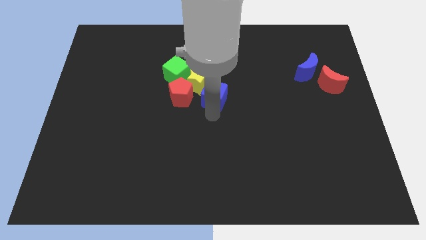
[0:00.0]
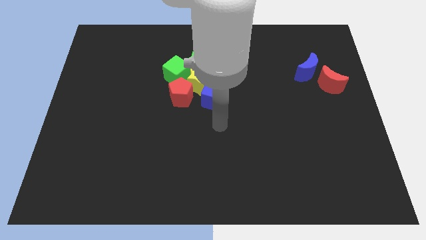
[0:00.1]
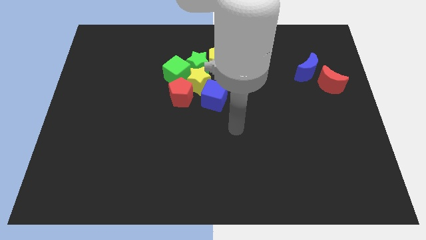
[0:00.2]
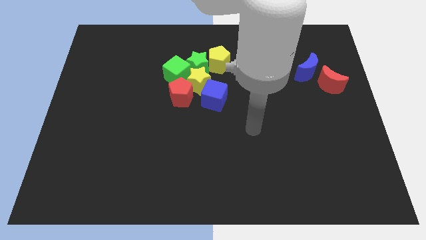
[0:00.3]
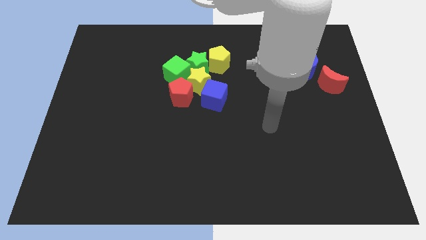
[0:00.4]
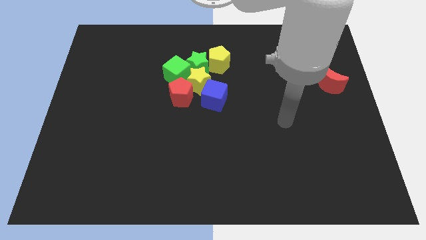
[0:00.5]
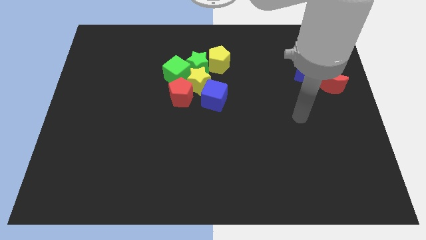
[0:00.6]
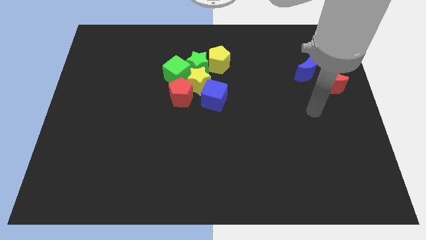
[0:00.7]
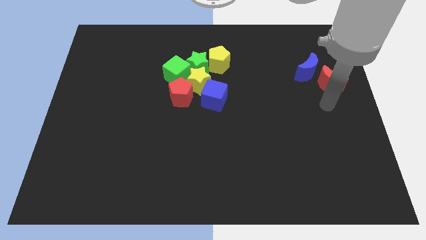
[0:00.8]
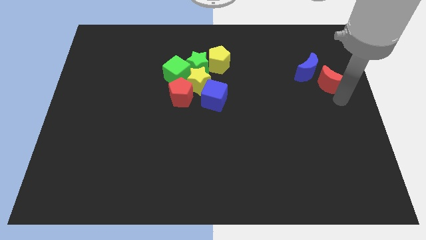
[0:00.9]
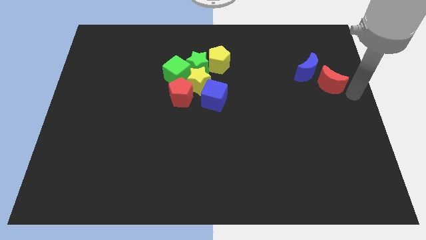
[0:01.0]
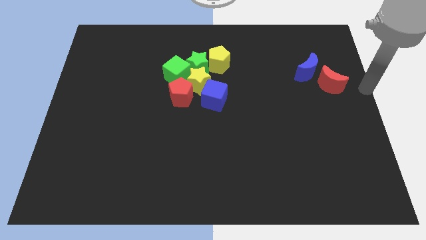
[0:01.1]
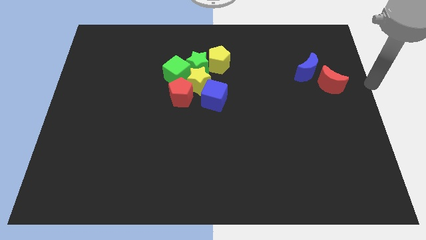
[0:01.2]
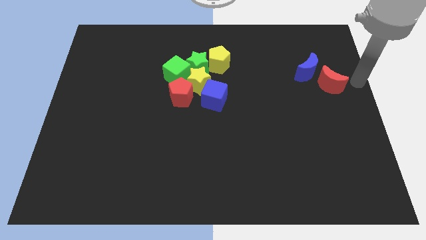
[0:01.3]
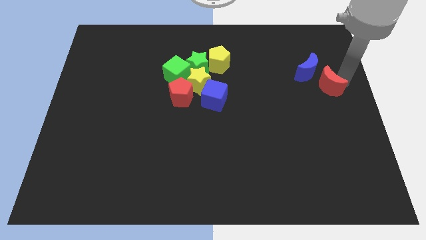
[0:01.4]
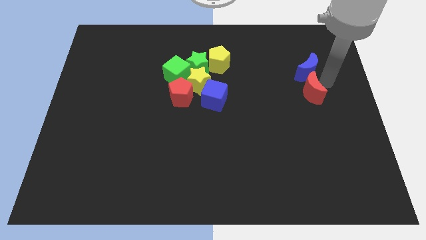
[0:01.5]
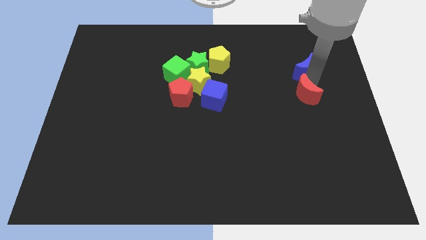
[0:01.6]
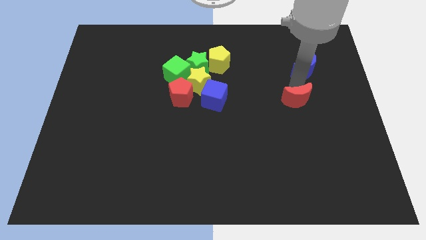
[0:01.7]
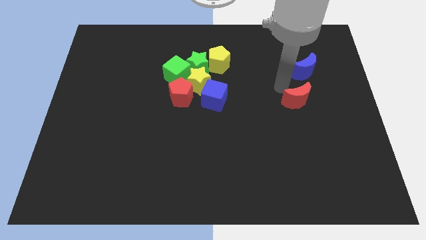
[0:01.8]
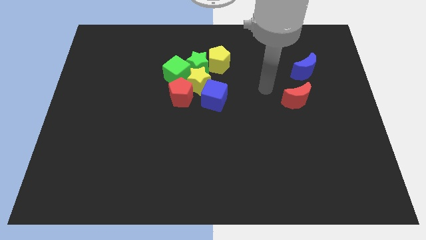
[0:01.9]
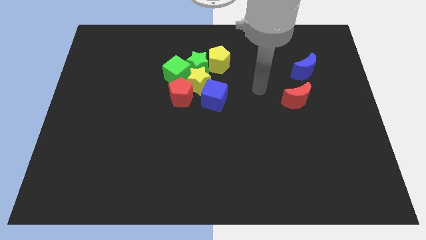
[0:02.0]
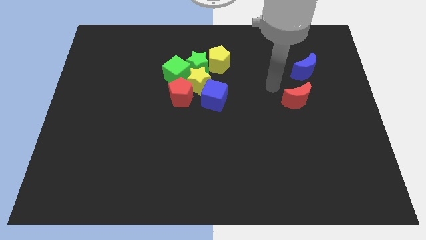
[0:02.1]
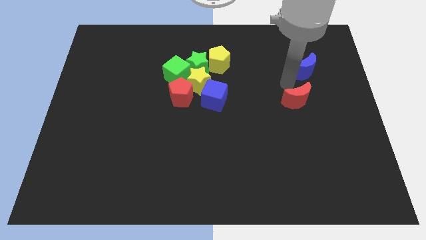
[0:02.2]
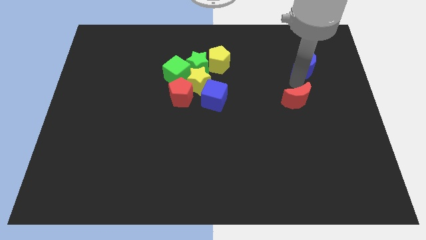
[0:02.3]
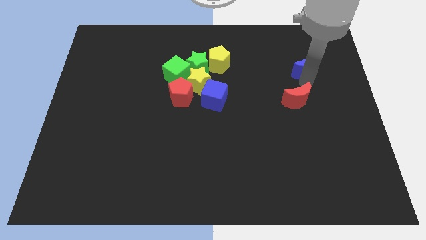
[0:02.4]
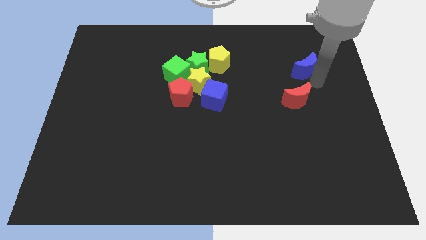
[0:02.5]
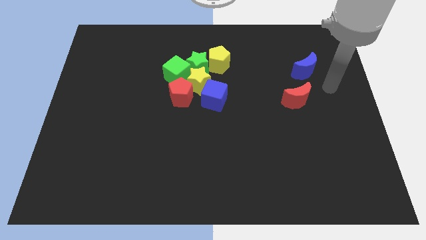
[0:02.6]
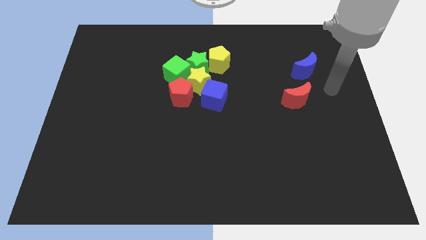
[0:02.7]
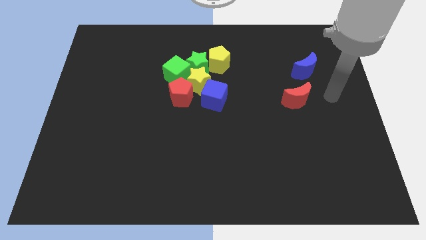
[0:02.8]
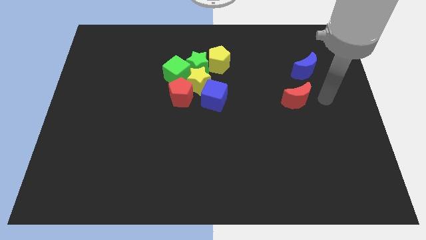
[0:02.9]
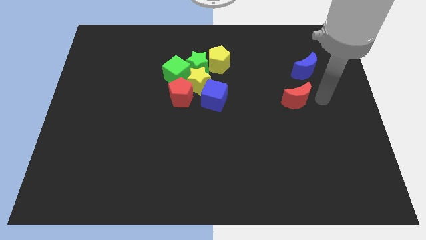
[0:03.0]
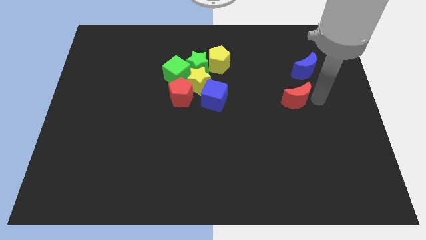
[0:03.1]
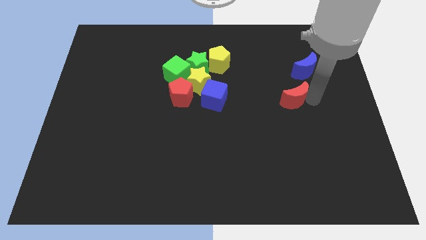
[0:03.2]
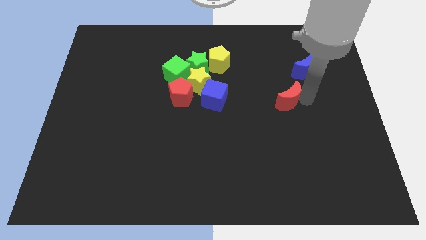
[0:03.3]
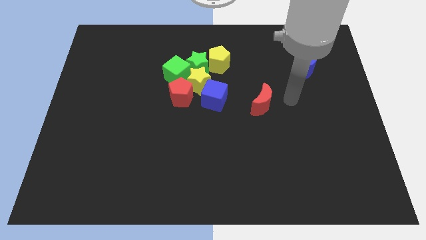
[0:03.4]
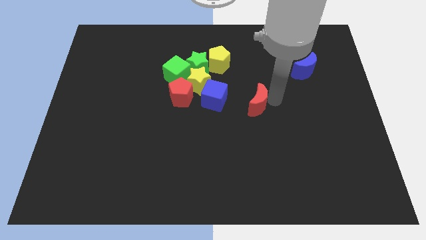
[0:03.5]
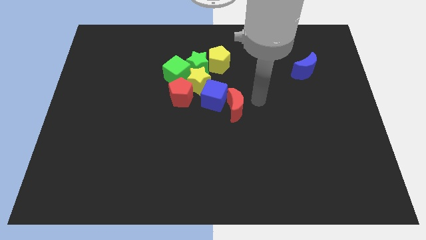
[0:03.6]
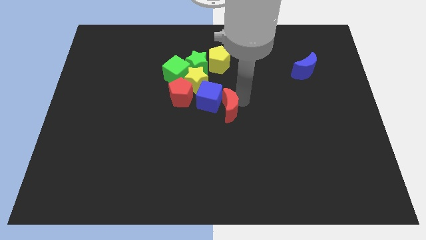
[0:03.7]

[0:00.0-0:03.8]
move the red crescent to the right of the blue cube

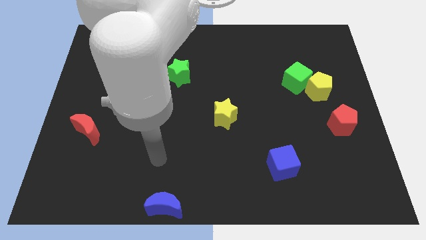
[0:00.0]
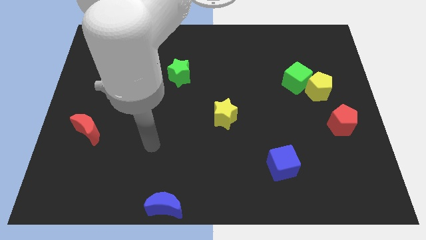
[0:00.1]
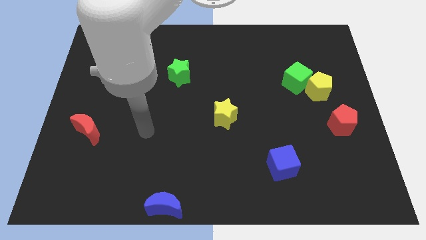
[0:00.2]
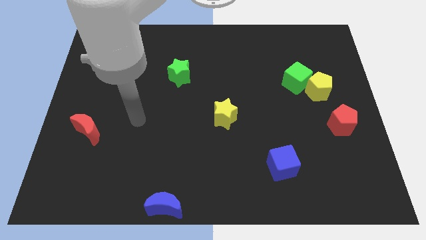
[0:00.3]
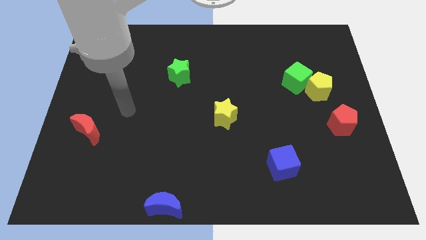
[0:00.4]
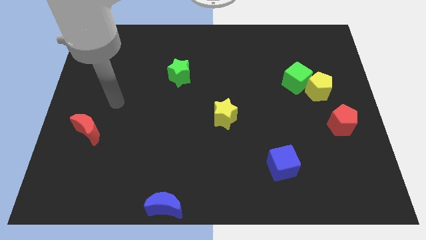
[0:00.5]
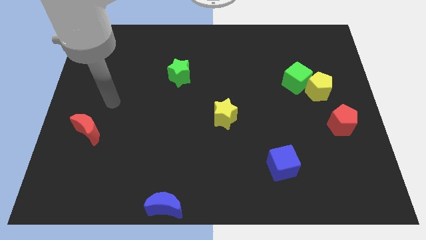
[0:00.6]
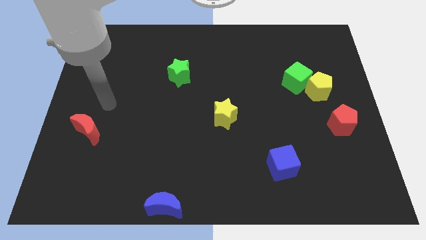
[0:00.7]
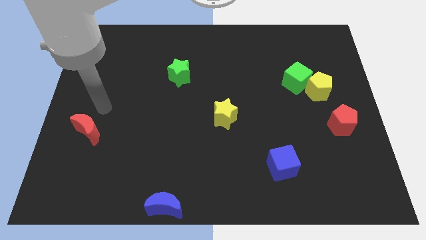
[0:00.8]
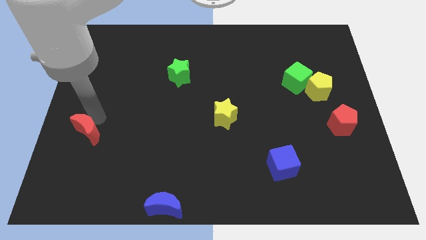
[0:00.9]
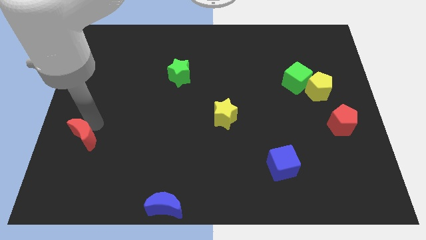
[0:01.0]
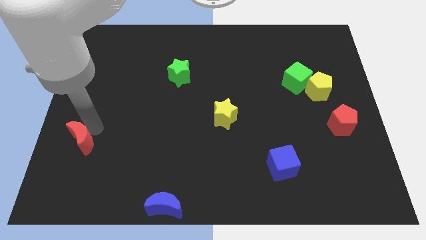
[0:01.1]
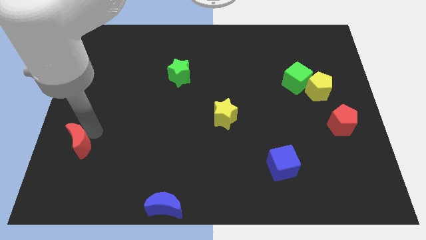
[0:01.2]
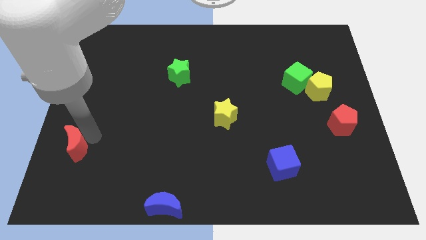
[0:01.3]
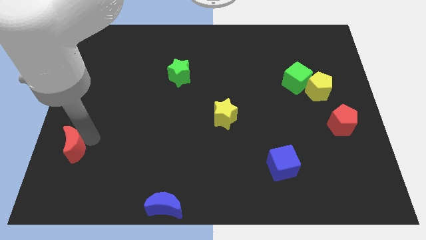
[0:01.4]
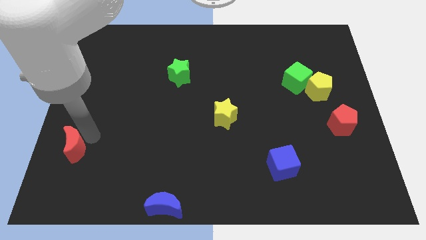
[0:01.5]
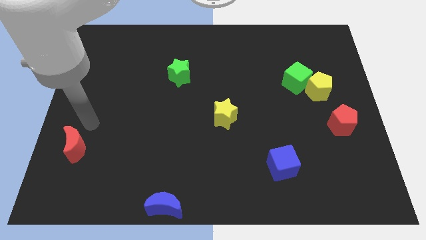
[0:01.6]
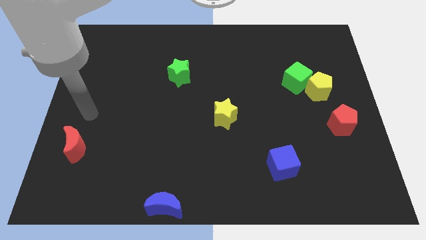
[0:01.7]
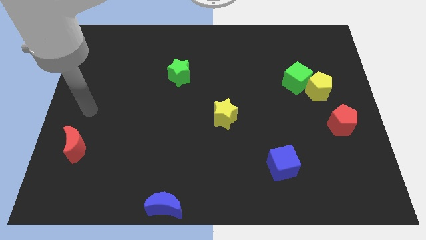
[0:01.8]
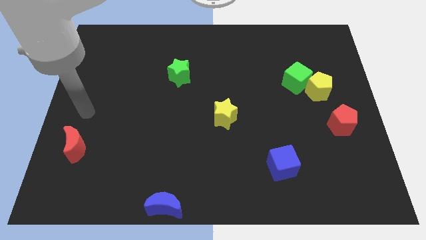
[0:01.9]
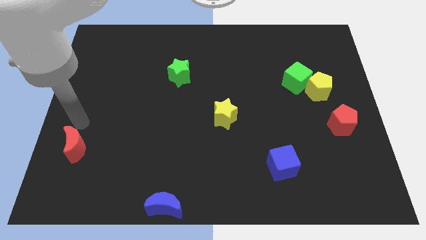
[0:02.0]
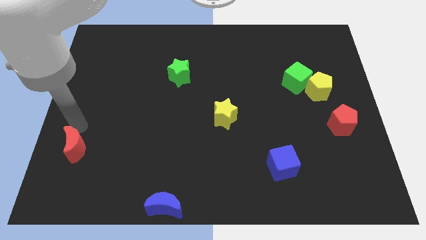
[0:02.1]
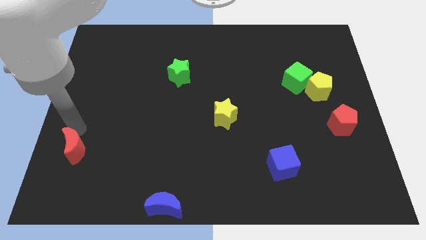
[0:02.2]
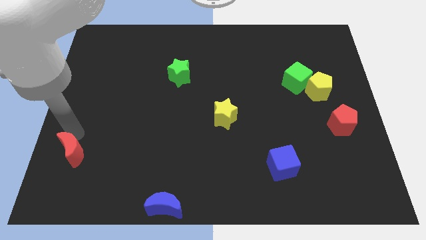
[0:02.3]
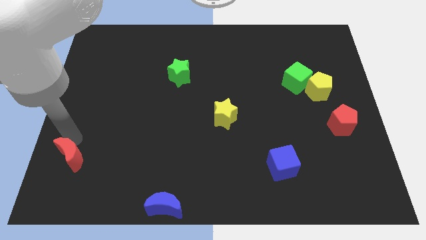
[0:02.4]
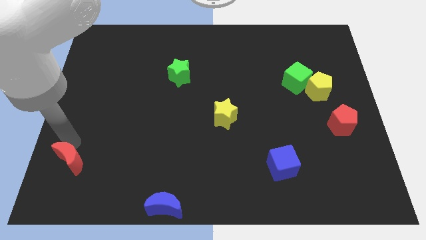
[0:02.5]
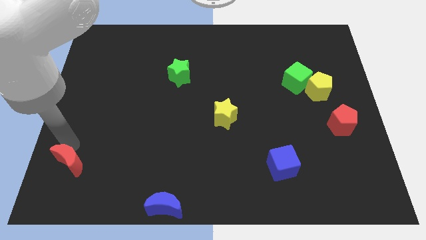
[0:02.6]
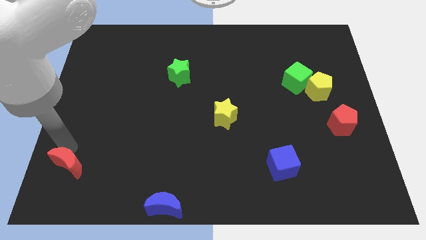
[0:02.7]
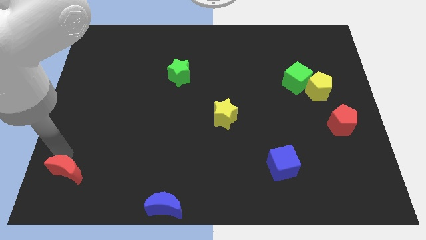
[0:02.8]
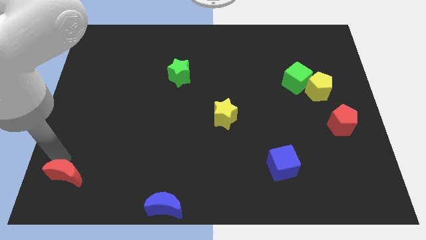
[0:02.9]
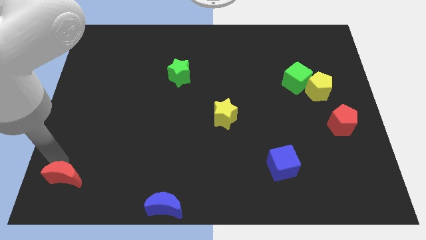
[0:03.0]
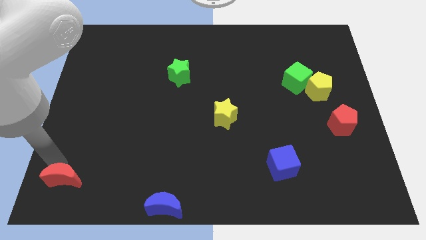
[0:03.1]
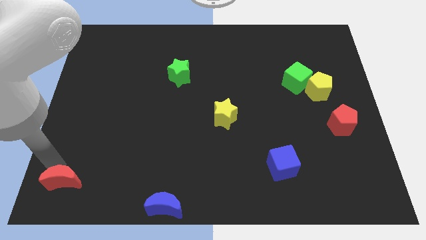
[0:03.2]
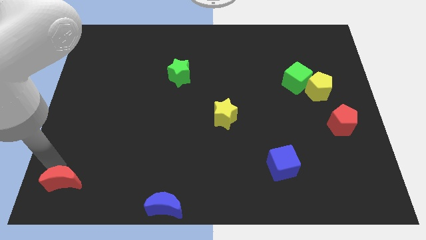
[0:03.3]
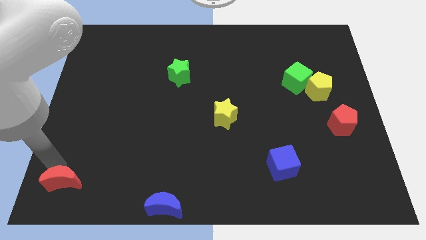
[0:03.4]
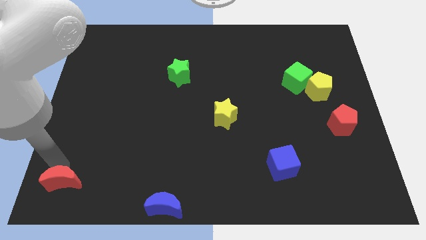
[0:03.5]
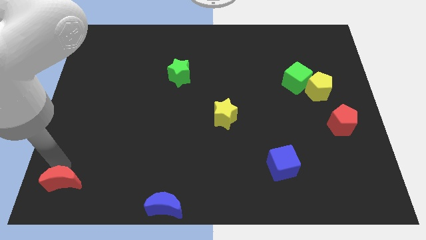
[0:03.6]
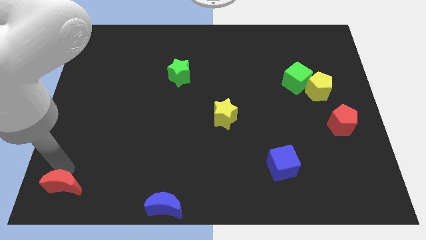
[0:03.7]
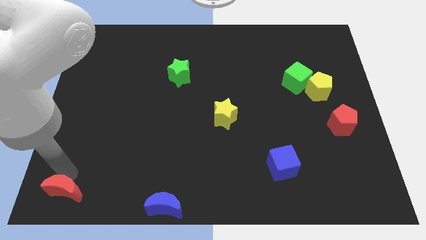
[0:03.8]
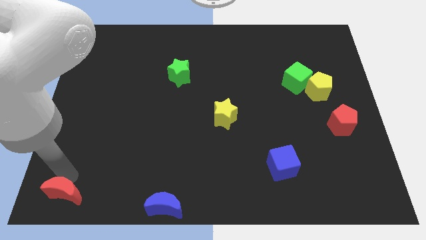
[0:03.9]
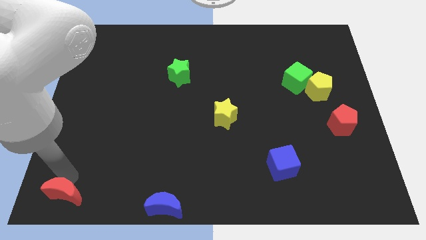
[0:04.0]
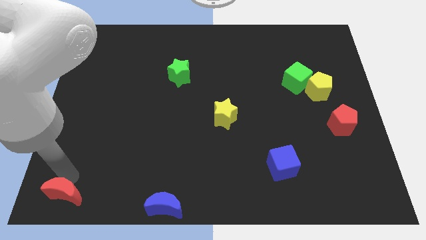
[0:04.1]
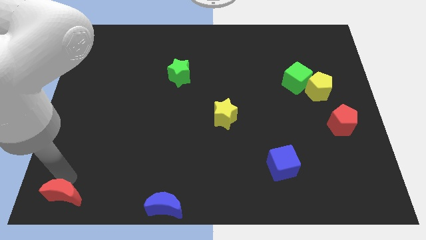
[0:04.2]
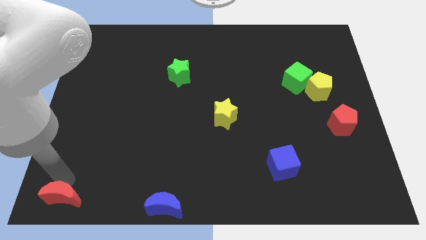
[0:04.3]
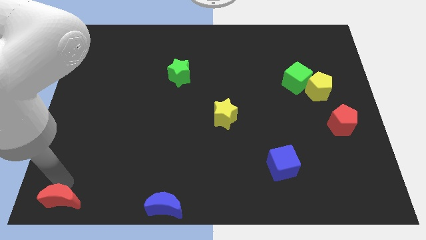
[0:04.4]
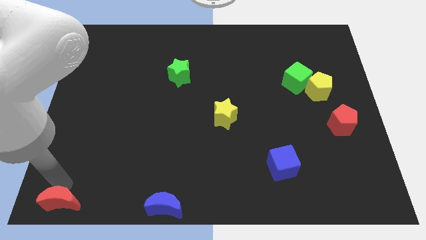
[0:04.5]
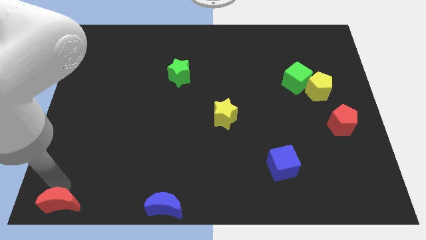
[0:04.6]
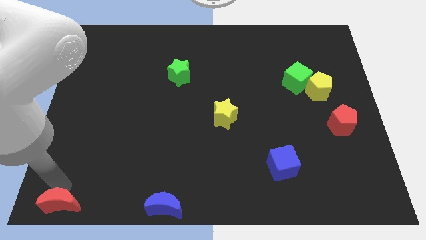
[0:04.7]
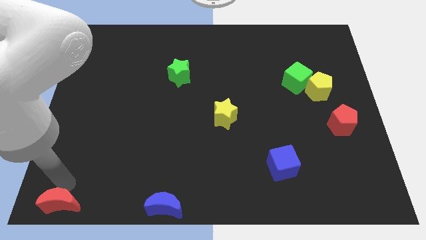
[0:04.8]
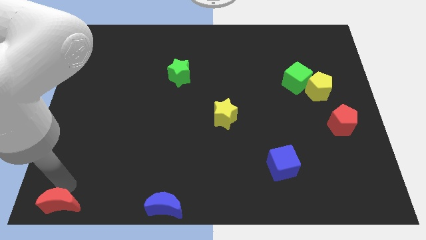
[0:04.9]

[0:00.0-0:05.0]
push the red crescent to the bottom left

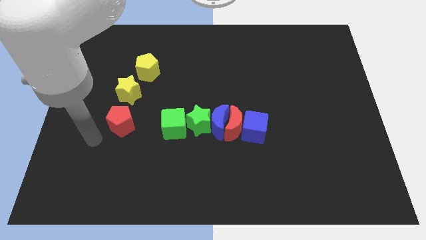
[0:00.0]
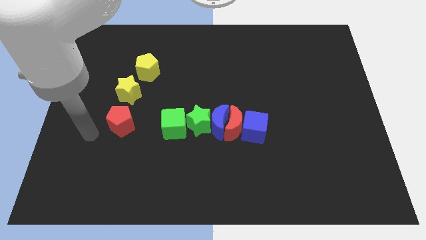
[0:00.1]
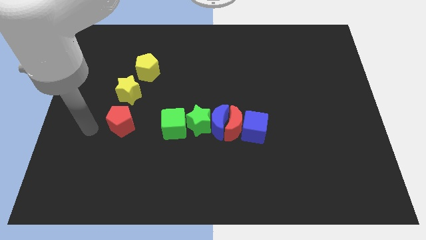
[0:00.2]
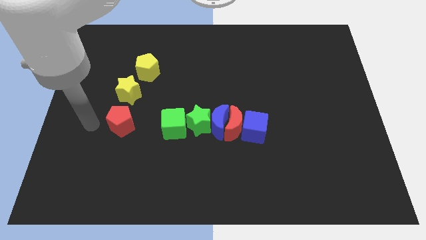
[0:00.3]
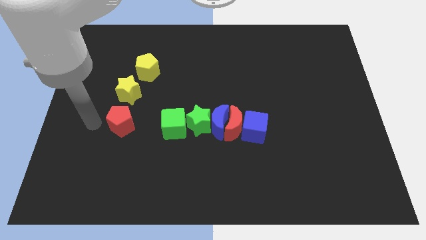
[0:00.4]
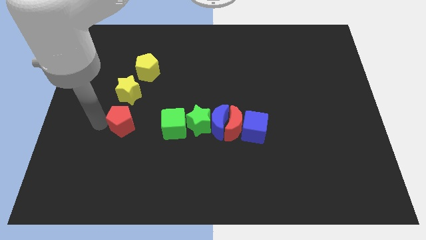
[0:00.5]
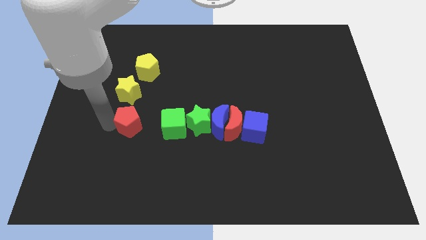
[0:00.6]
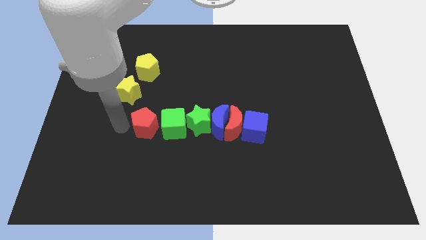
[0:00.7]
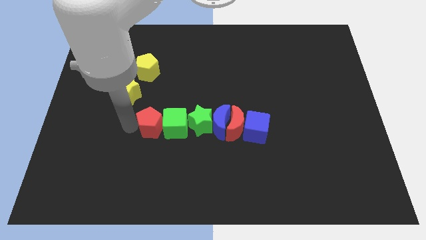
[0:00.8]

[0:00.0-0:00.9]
move red pentagon close to the green cube
